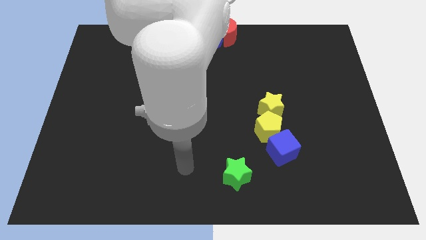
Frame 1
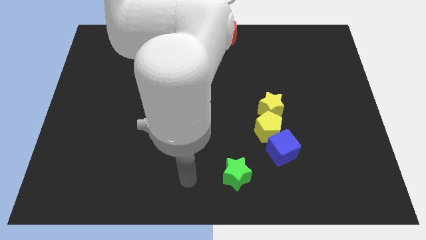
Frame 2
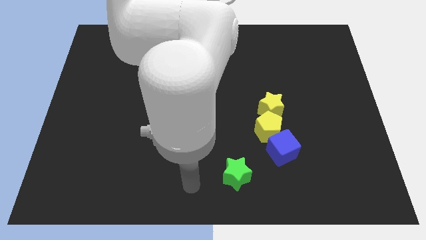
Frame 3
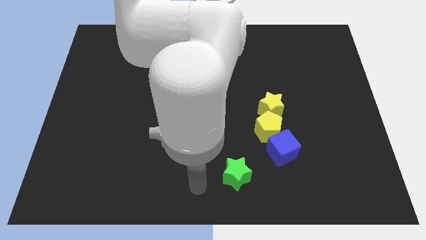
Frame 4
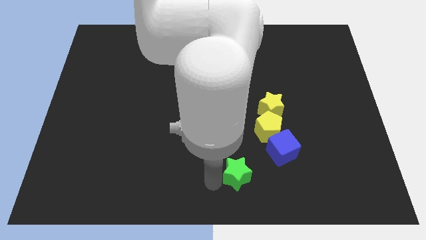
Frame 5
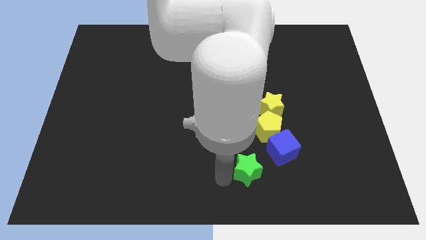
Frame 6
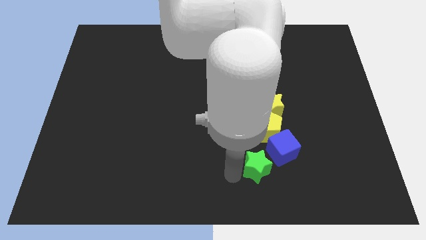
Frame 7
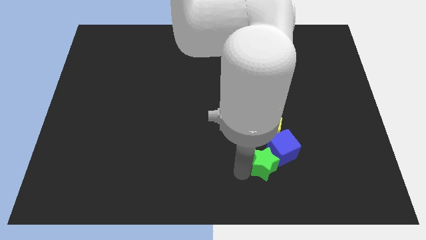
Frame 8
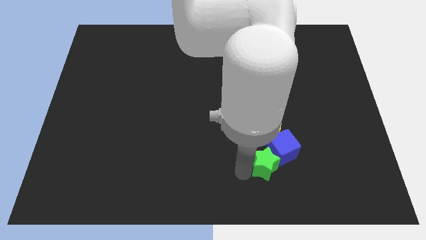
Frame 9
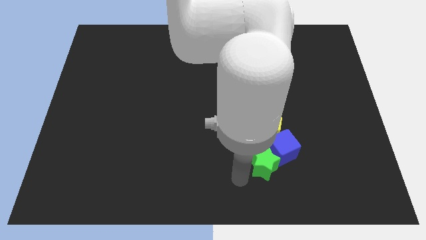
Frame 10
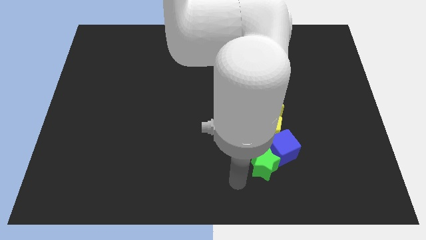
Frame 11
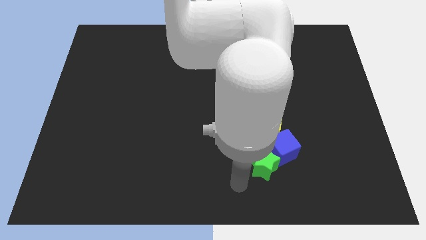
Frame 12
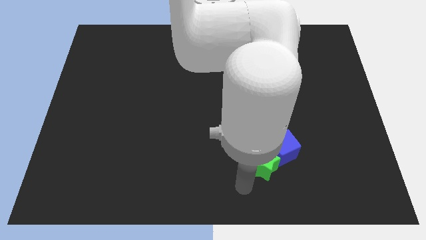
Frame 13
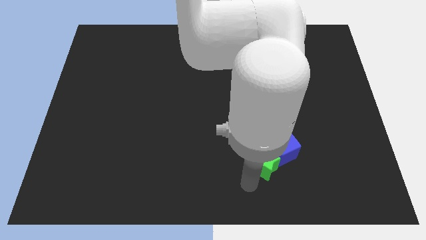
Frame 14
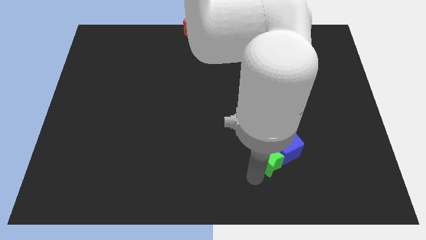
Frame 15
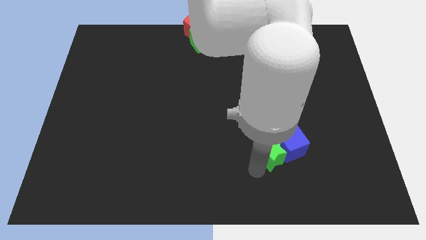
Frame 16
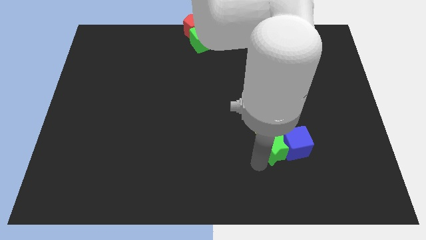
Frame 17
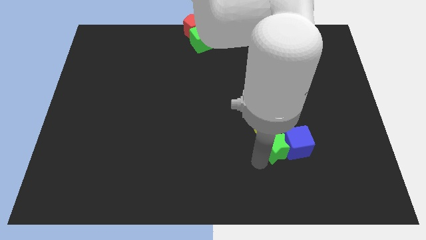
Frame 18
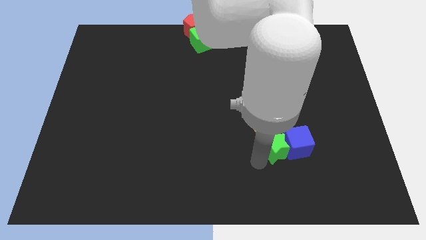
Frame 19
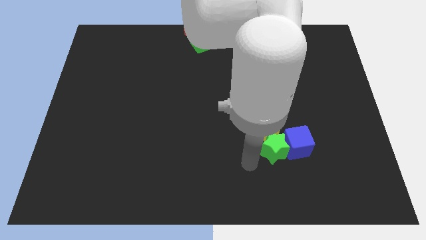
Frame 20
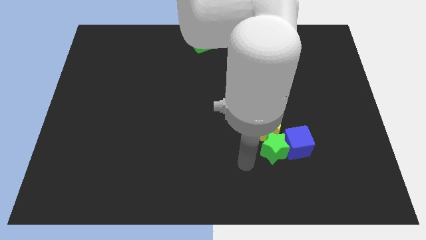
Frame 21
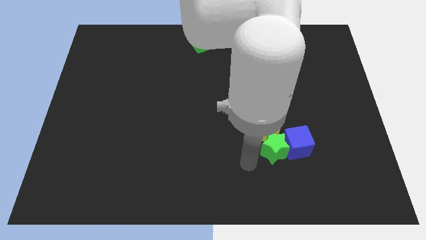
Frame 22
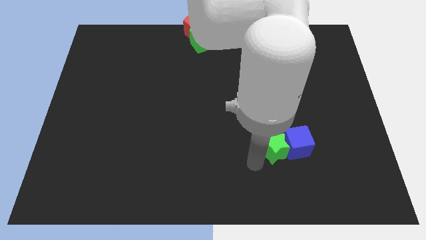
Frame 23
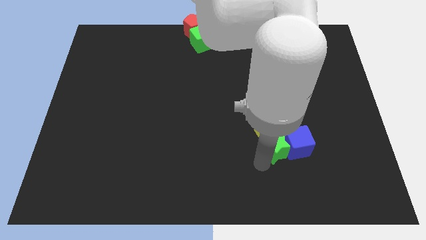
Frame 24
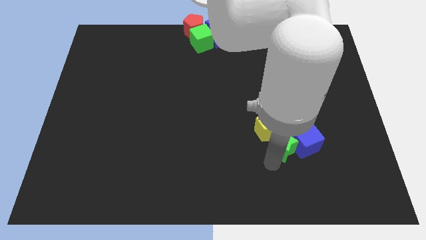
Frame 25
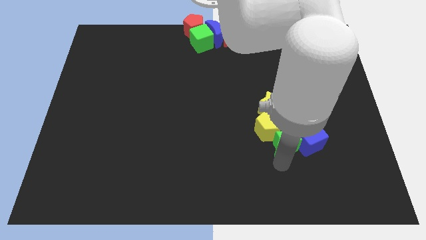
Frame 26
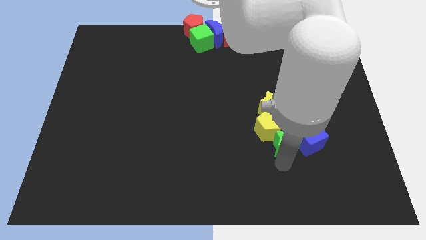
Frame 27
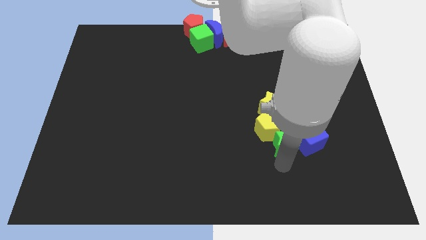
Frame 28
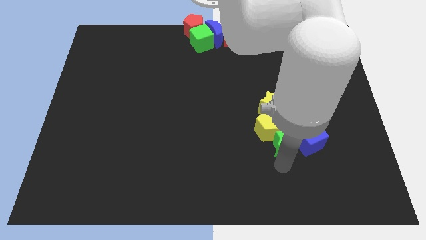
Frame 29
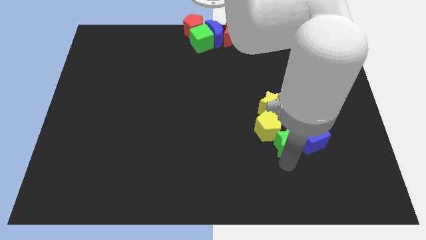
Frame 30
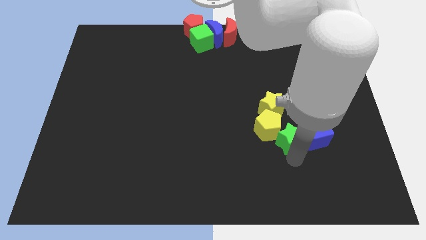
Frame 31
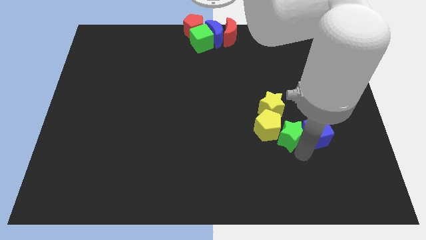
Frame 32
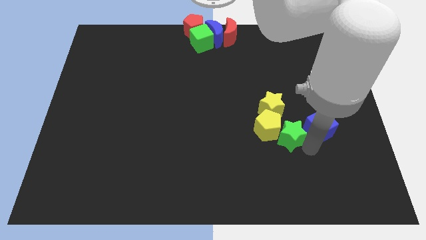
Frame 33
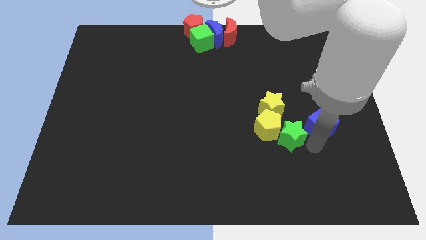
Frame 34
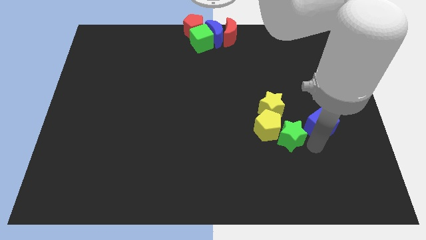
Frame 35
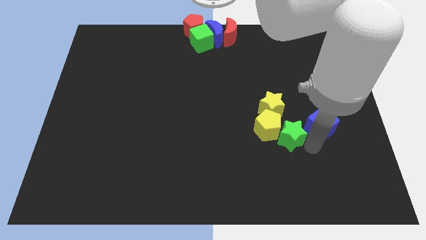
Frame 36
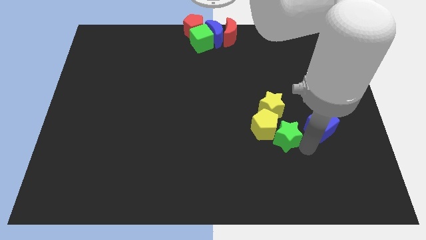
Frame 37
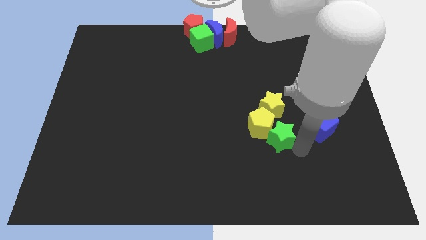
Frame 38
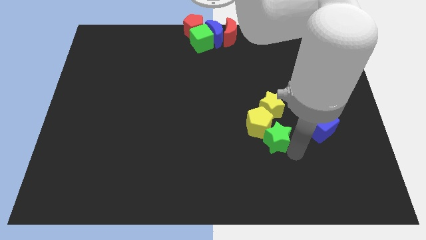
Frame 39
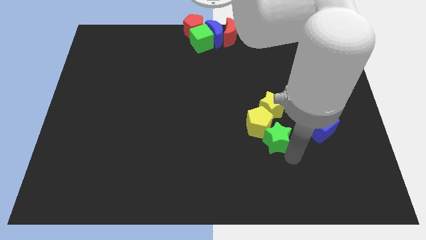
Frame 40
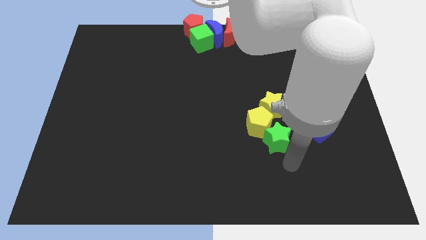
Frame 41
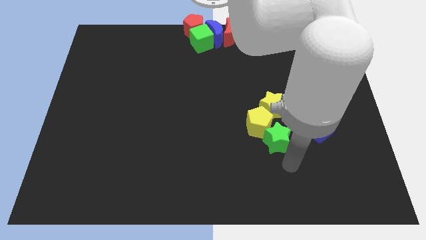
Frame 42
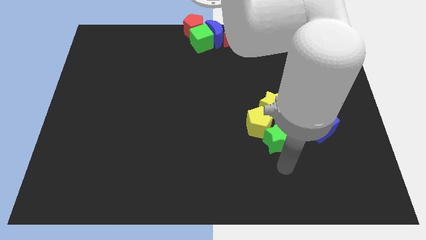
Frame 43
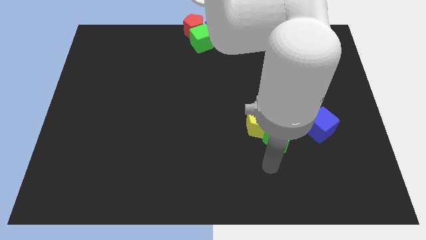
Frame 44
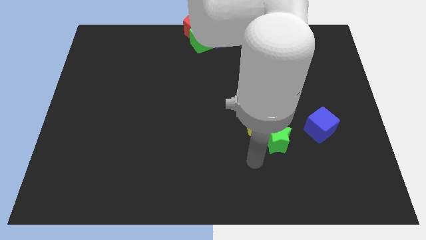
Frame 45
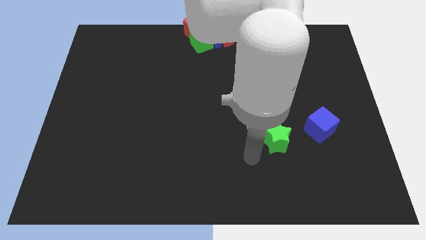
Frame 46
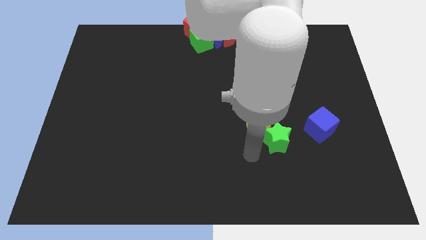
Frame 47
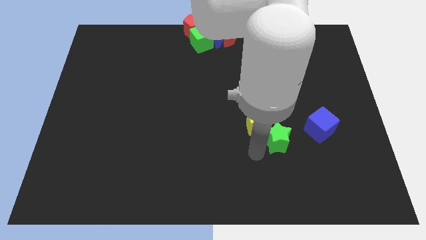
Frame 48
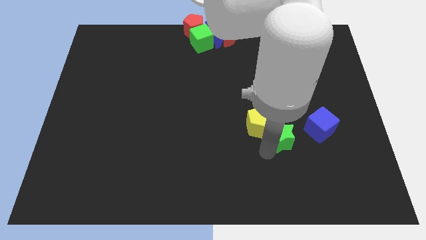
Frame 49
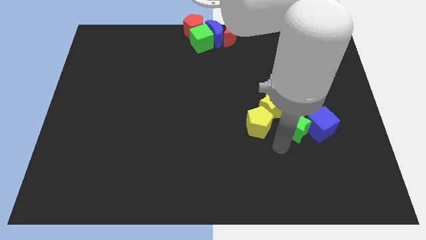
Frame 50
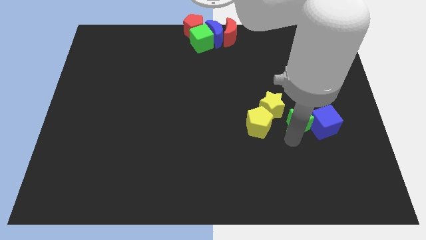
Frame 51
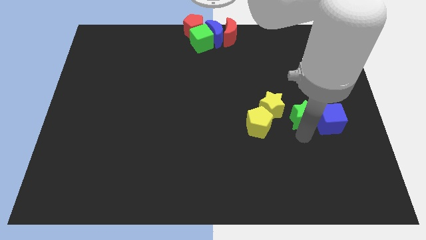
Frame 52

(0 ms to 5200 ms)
push the green star into the blue cube

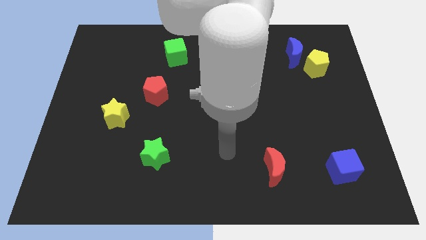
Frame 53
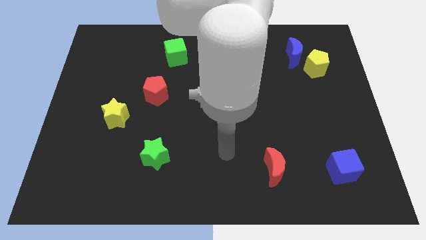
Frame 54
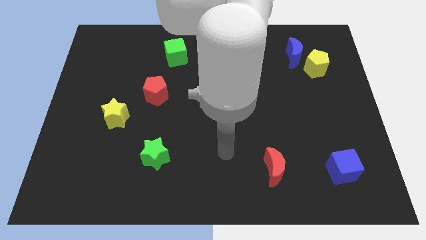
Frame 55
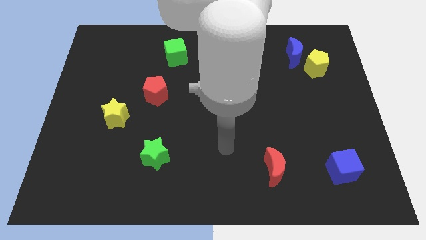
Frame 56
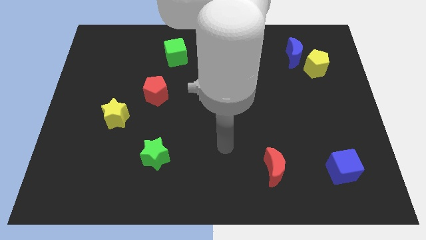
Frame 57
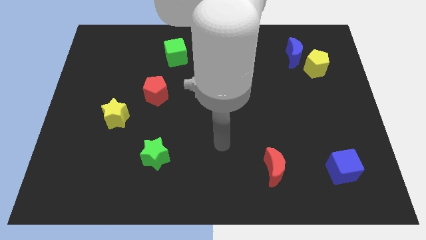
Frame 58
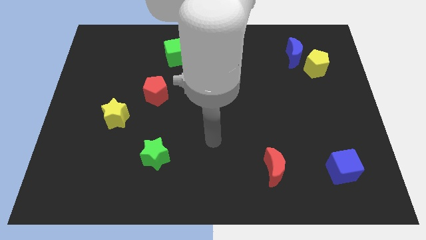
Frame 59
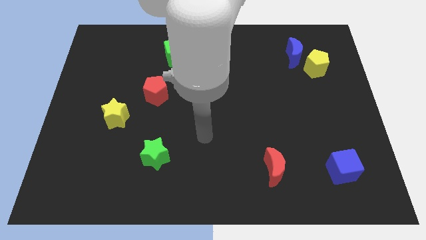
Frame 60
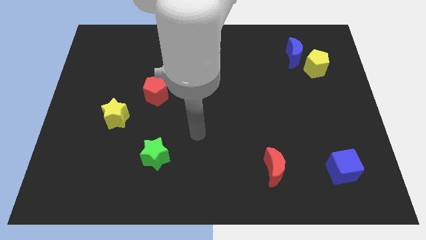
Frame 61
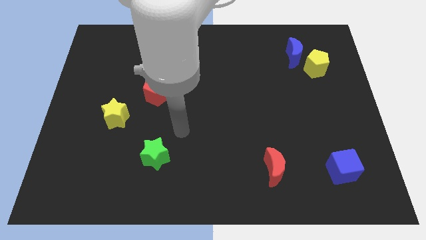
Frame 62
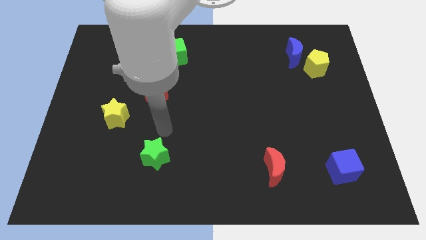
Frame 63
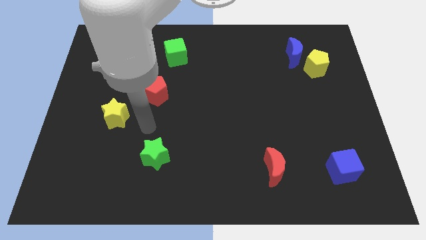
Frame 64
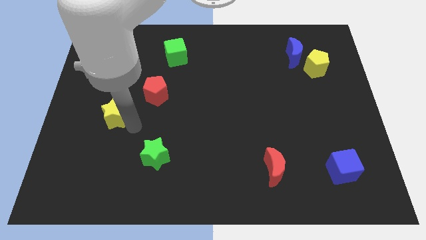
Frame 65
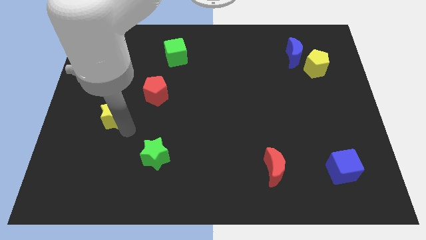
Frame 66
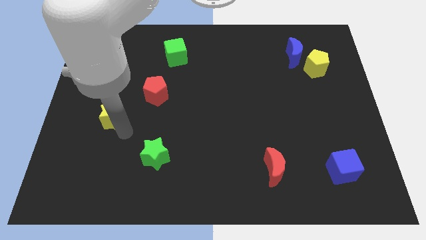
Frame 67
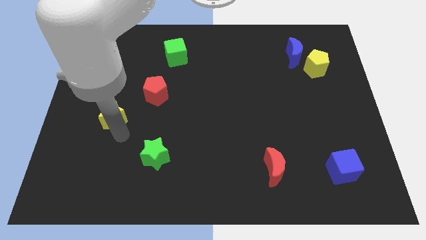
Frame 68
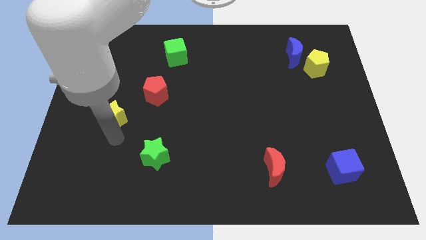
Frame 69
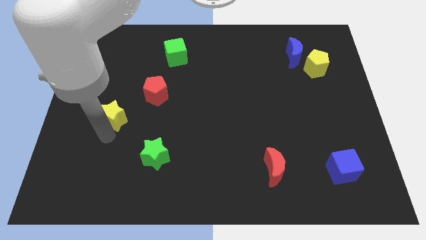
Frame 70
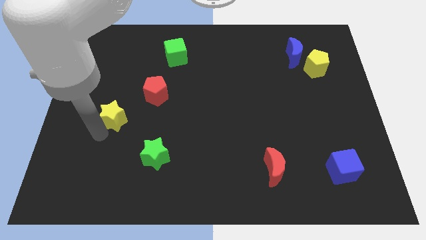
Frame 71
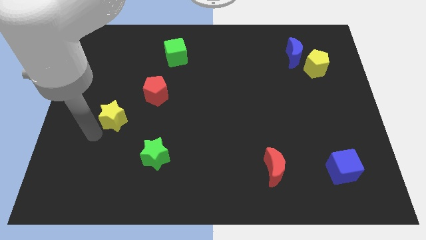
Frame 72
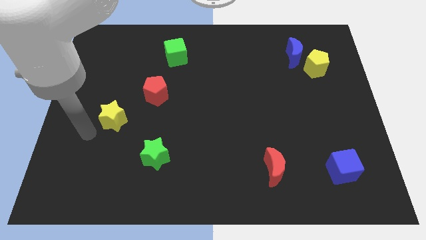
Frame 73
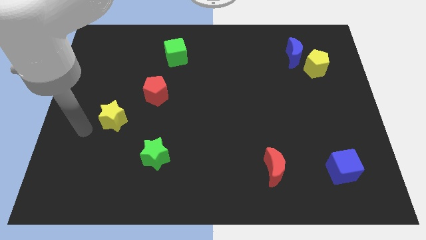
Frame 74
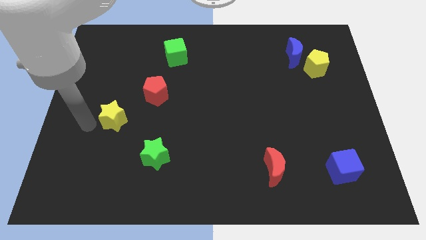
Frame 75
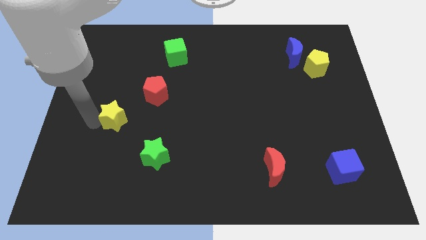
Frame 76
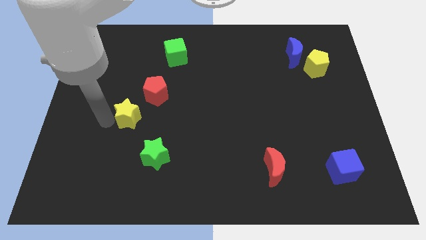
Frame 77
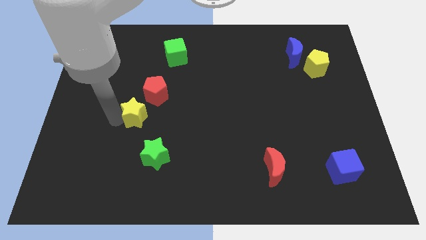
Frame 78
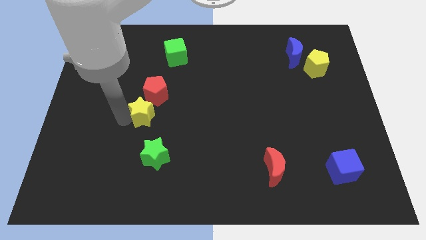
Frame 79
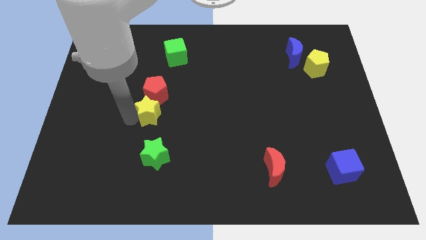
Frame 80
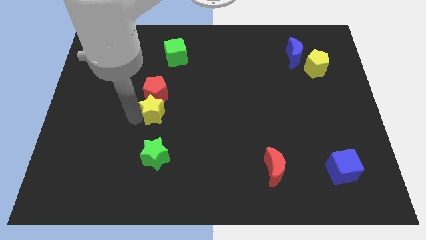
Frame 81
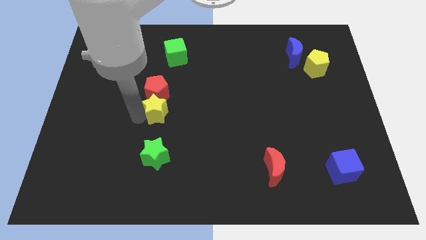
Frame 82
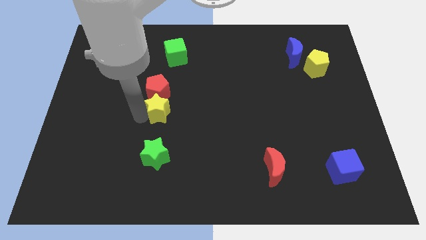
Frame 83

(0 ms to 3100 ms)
place the yellow star below the red pentagon

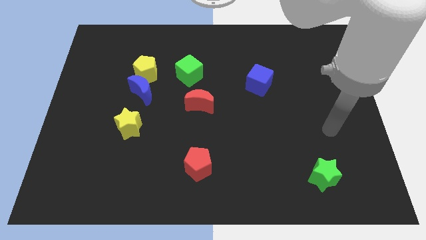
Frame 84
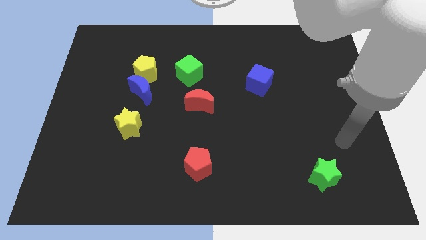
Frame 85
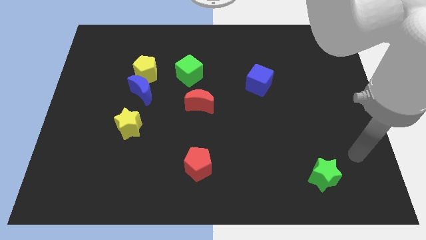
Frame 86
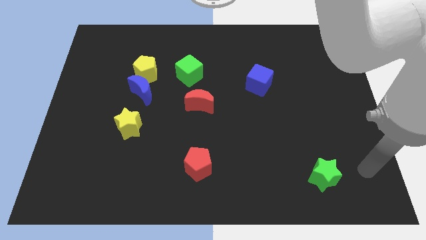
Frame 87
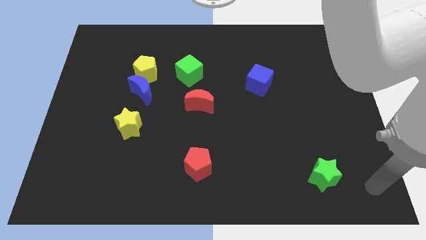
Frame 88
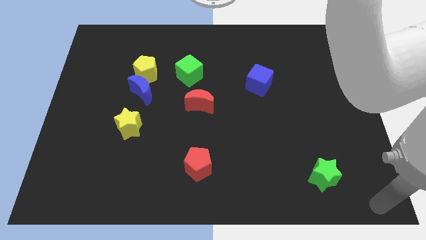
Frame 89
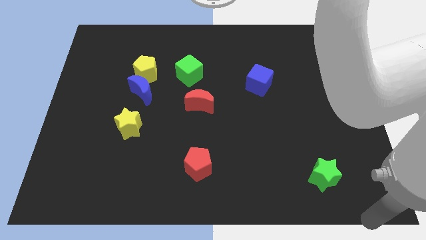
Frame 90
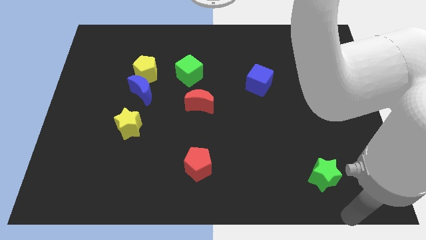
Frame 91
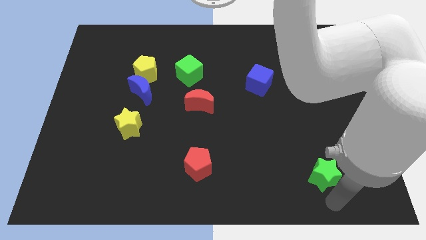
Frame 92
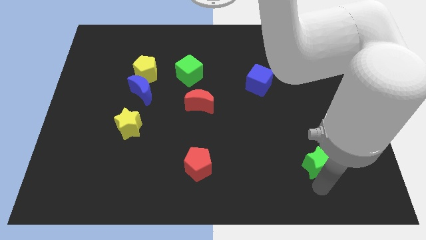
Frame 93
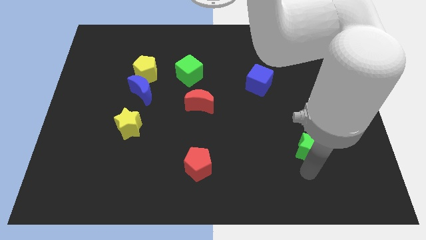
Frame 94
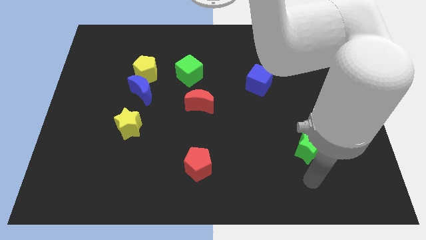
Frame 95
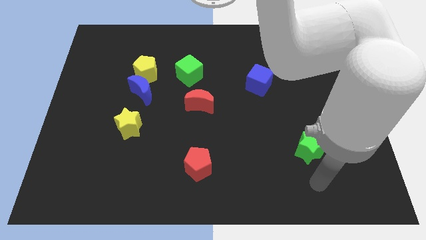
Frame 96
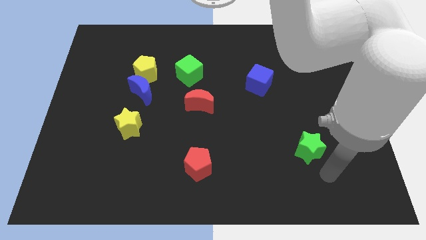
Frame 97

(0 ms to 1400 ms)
move the green star slightly upwards
